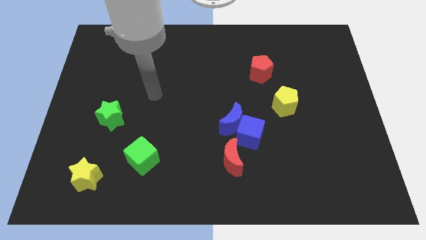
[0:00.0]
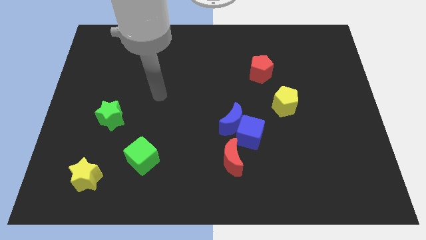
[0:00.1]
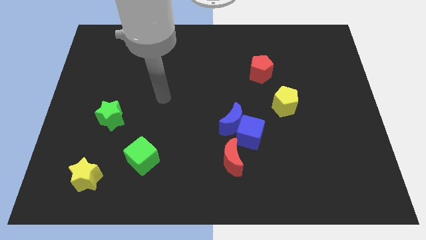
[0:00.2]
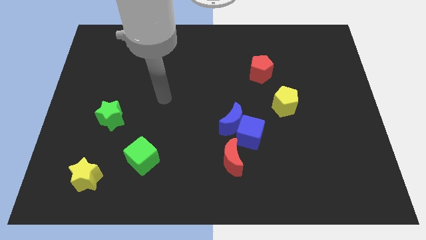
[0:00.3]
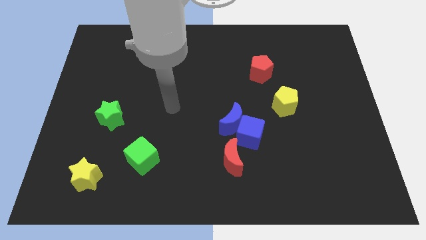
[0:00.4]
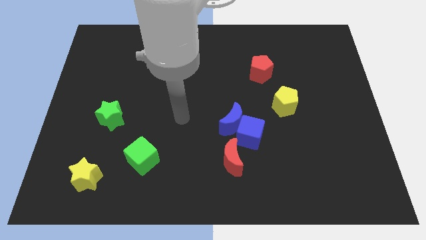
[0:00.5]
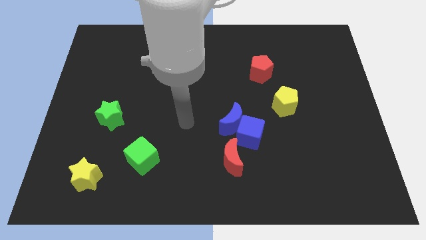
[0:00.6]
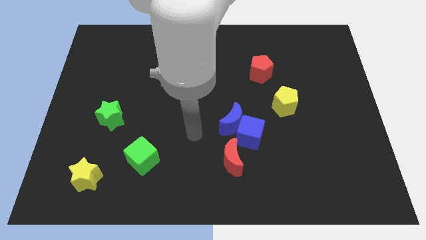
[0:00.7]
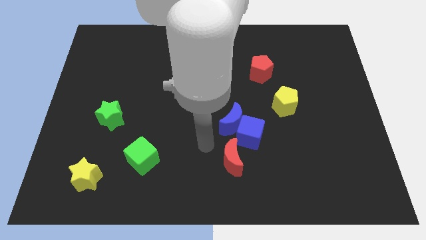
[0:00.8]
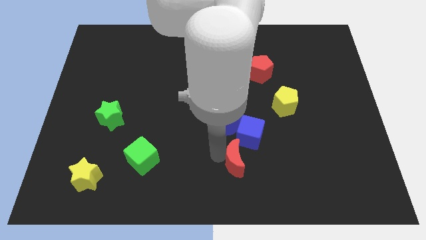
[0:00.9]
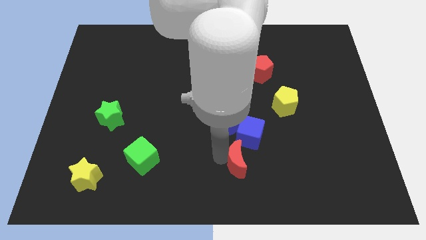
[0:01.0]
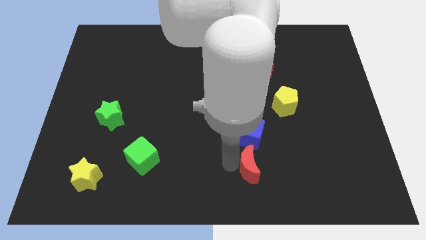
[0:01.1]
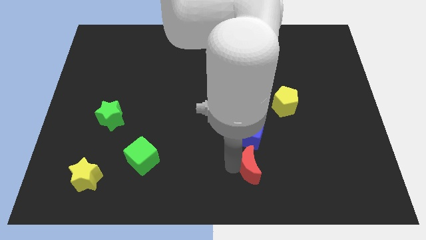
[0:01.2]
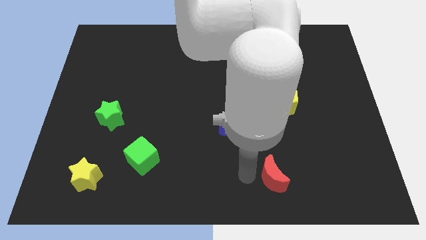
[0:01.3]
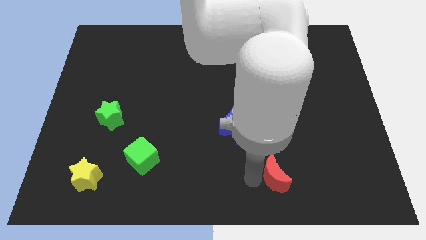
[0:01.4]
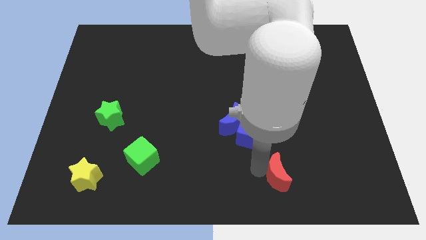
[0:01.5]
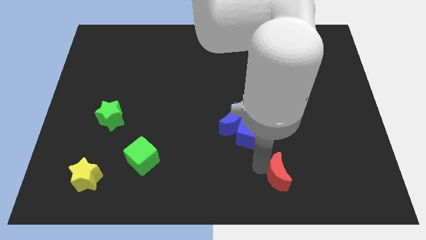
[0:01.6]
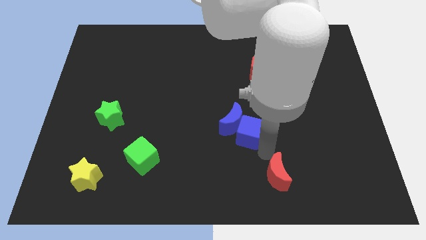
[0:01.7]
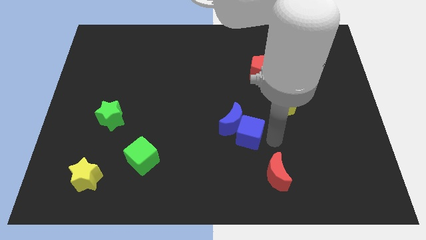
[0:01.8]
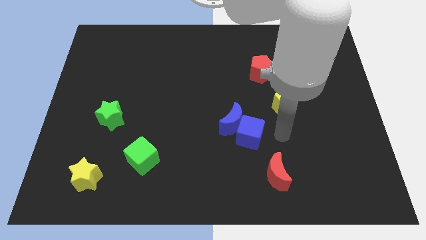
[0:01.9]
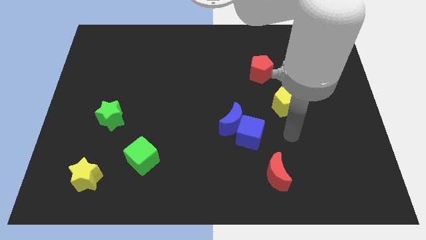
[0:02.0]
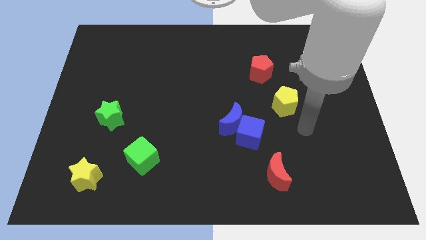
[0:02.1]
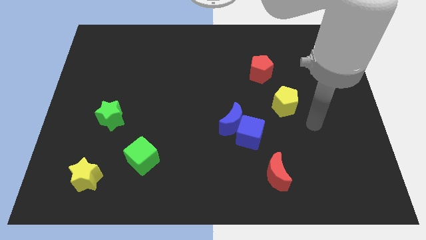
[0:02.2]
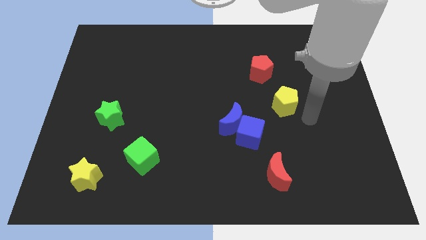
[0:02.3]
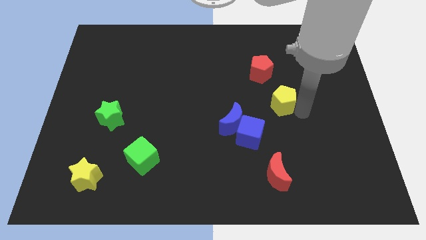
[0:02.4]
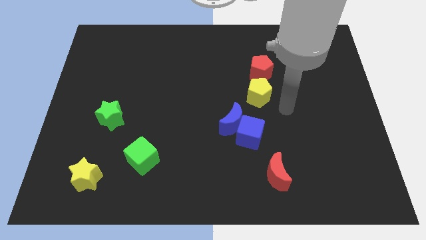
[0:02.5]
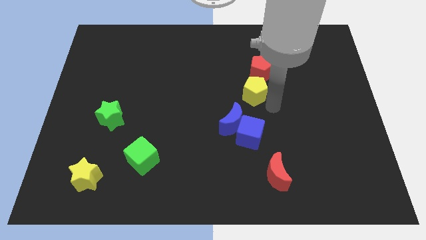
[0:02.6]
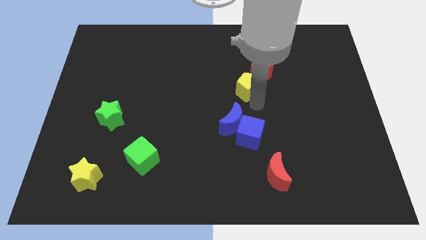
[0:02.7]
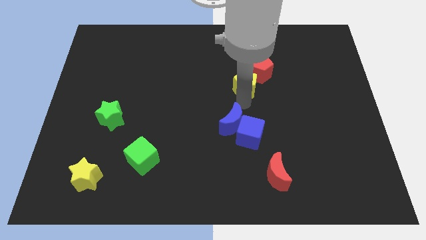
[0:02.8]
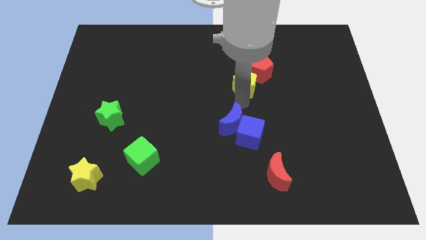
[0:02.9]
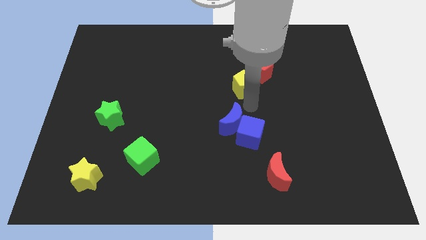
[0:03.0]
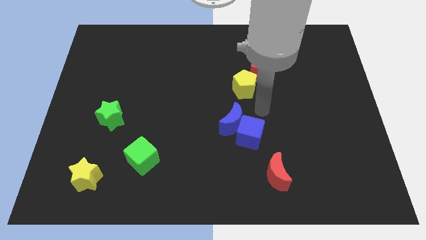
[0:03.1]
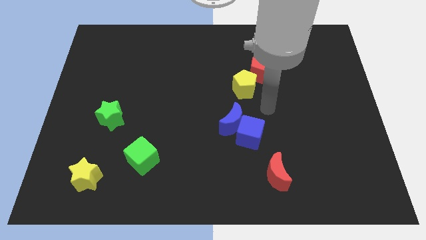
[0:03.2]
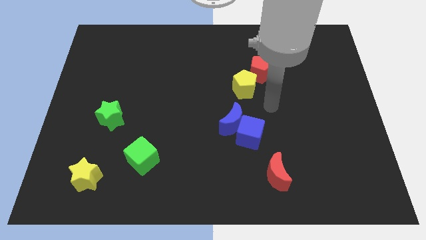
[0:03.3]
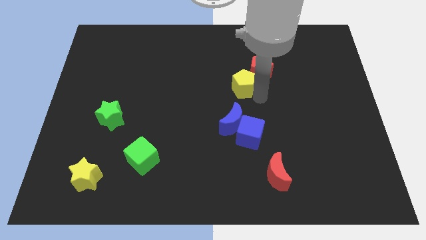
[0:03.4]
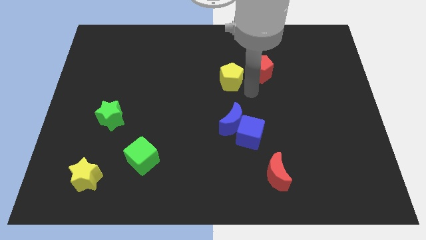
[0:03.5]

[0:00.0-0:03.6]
separate the blue cube and the red moon

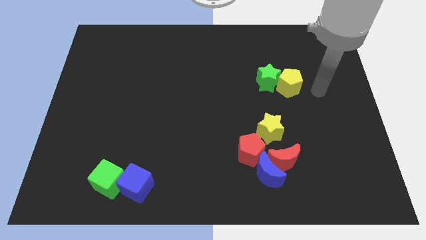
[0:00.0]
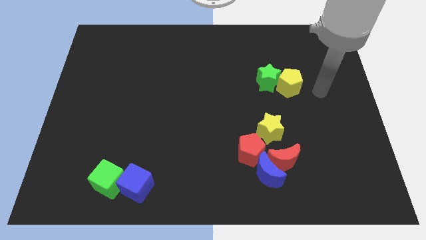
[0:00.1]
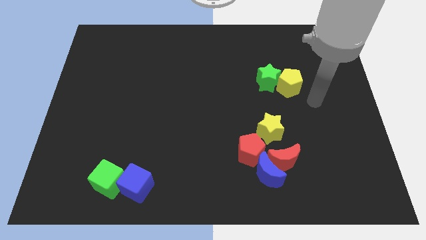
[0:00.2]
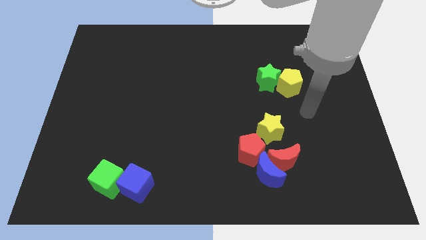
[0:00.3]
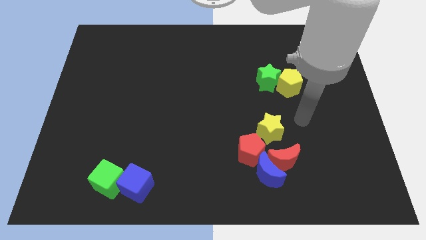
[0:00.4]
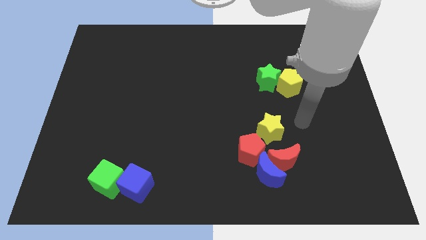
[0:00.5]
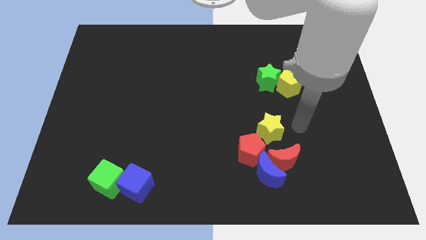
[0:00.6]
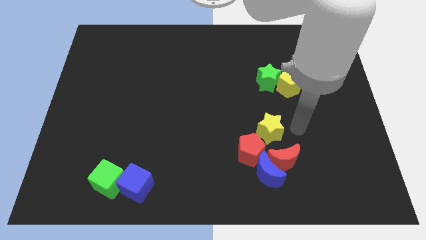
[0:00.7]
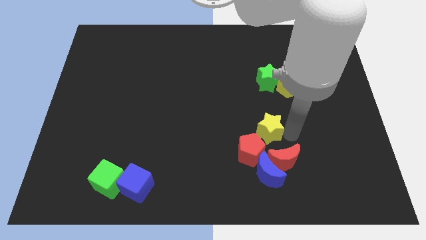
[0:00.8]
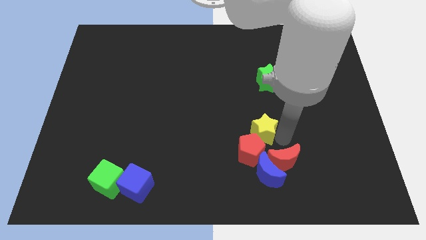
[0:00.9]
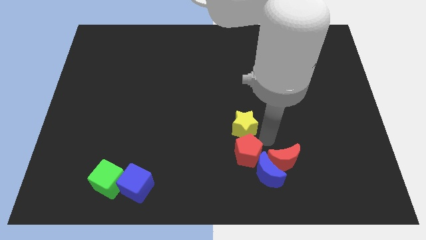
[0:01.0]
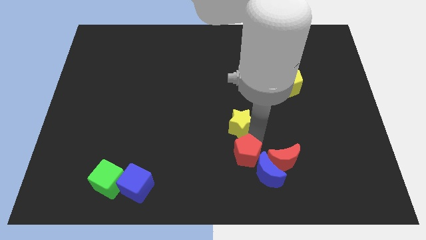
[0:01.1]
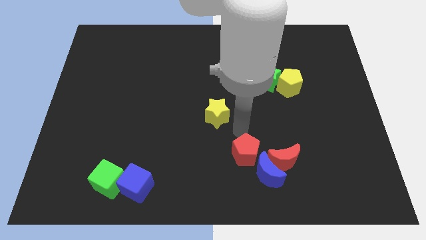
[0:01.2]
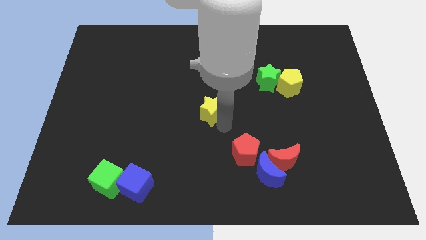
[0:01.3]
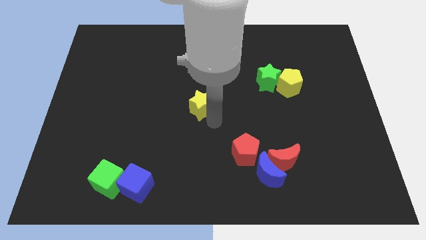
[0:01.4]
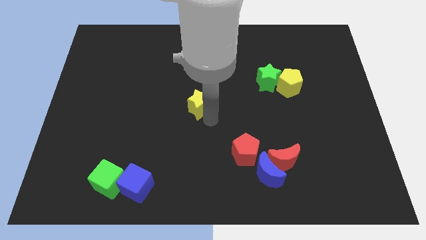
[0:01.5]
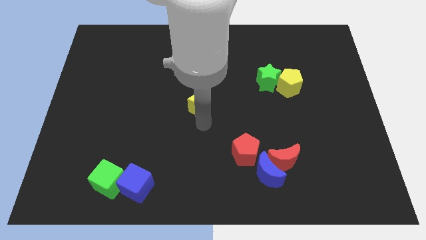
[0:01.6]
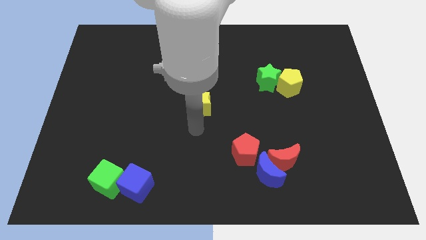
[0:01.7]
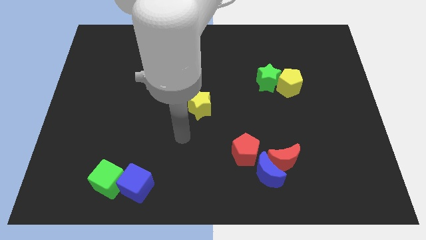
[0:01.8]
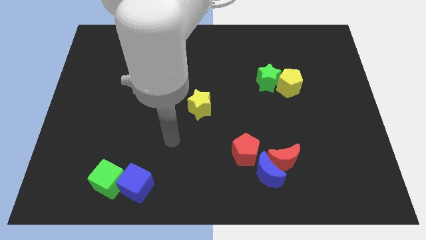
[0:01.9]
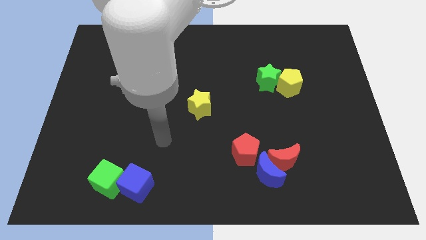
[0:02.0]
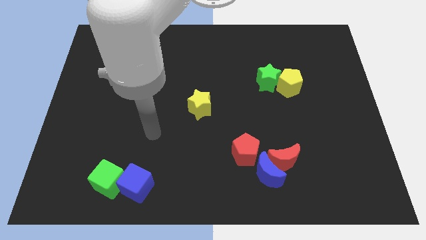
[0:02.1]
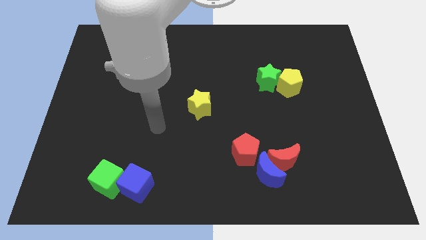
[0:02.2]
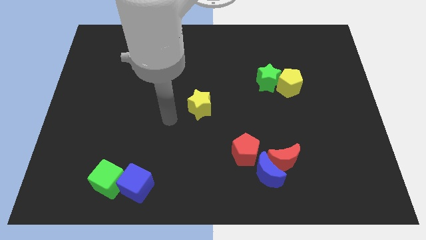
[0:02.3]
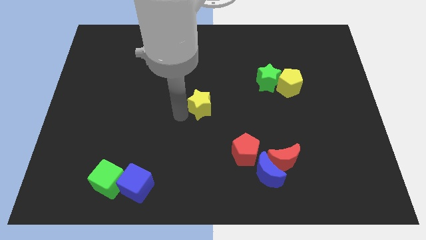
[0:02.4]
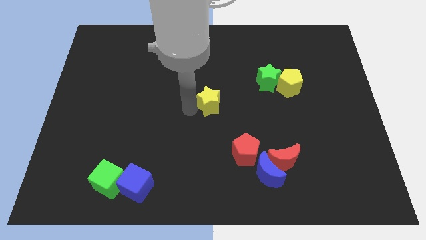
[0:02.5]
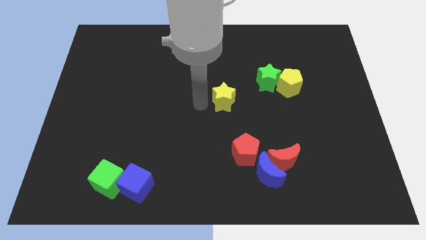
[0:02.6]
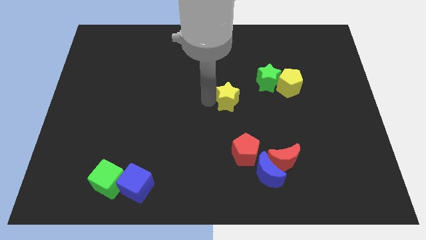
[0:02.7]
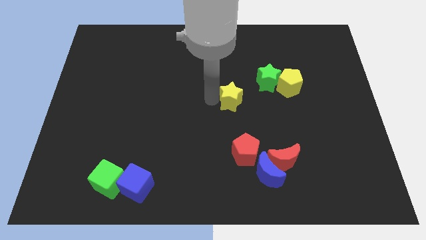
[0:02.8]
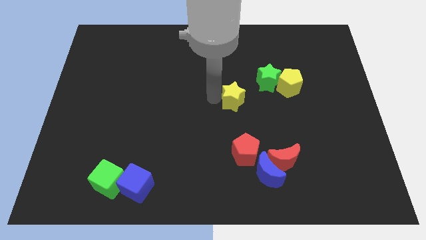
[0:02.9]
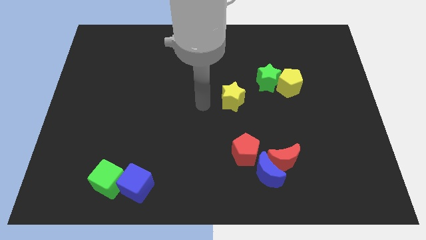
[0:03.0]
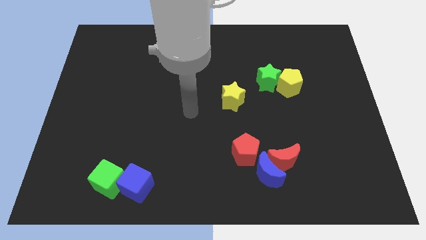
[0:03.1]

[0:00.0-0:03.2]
push the yellow star toward towards the center

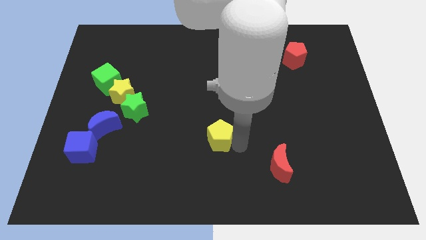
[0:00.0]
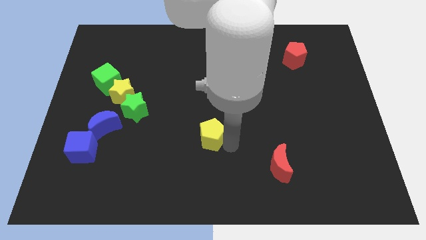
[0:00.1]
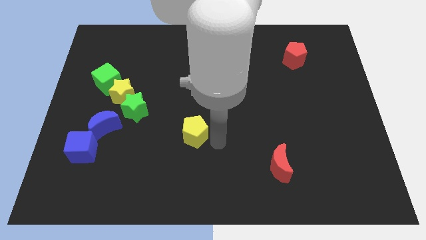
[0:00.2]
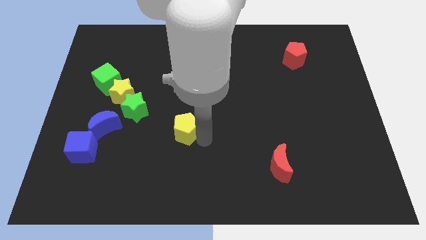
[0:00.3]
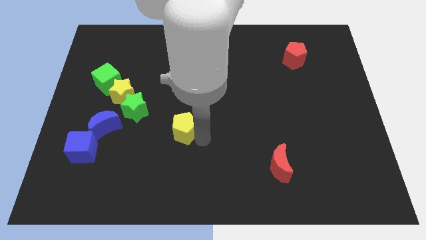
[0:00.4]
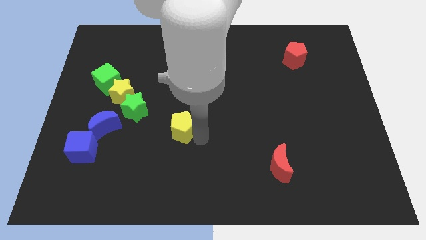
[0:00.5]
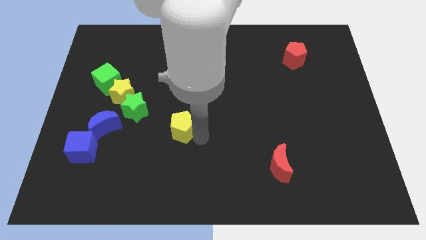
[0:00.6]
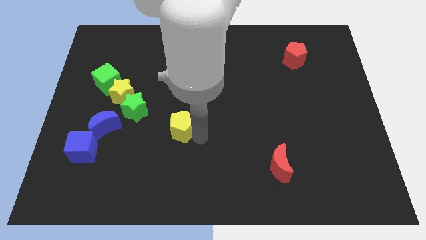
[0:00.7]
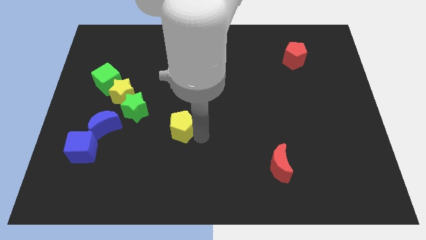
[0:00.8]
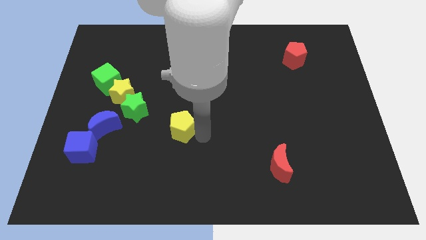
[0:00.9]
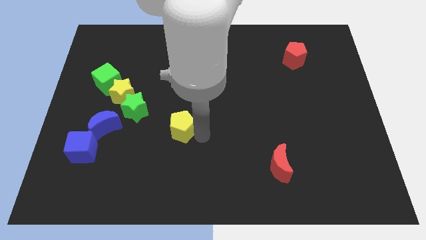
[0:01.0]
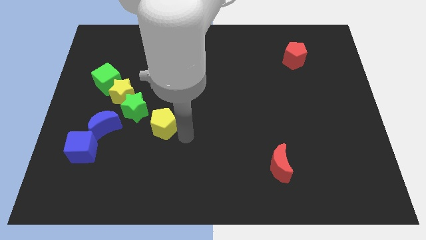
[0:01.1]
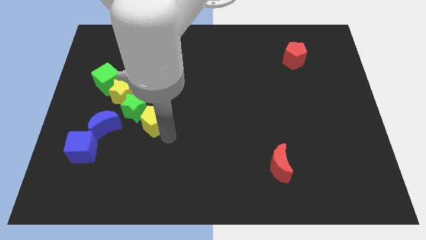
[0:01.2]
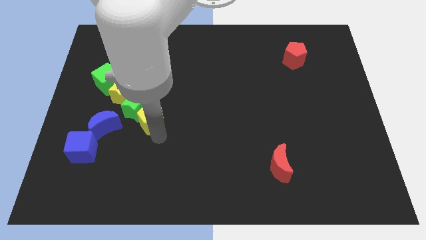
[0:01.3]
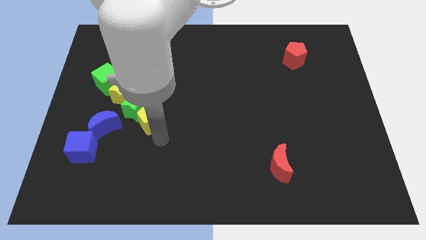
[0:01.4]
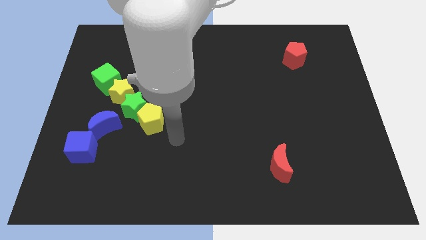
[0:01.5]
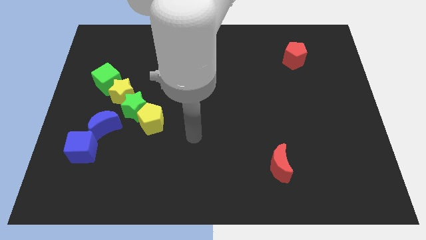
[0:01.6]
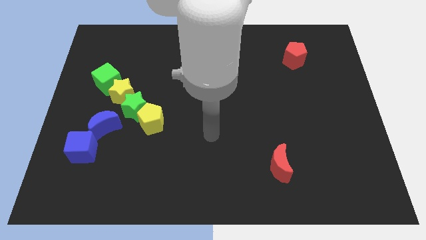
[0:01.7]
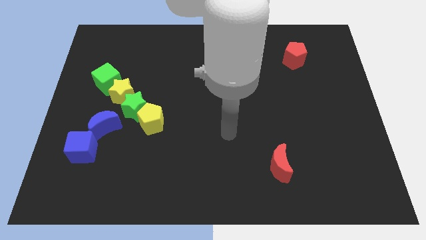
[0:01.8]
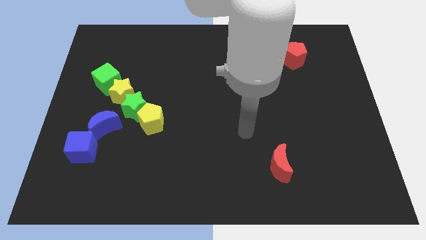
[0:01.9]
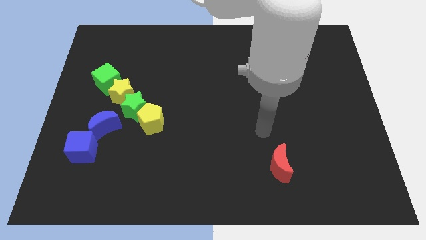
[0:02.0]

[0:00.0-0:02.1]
slide yellow pentagon into green star

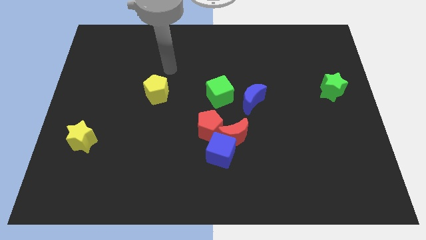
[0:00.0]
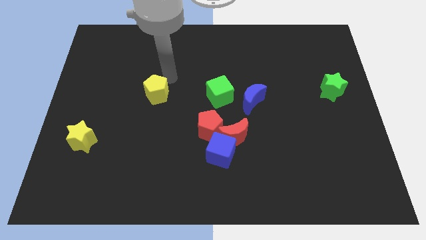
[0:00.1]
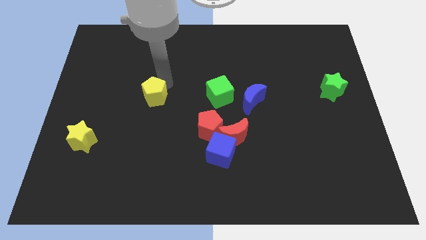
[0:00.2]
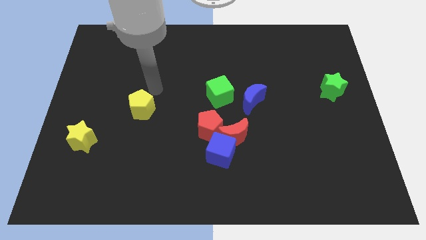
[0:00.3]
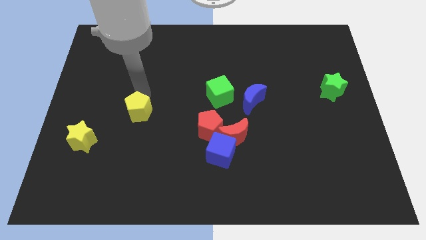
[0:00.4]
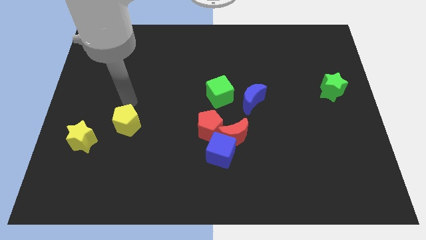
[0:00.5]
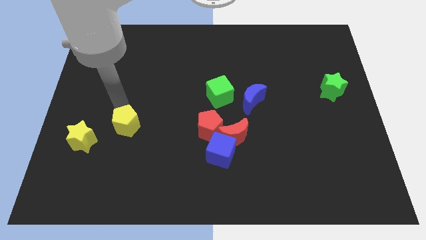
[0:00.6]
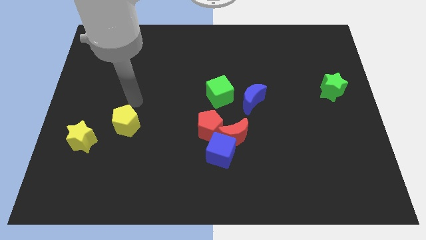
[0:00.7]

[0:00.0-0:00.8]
move the yellow pentagon to the left of the red pentagon
